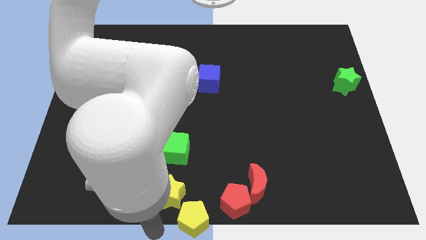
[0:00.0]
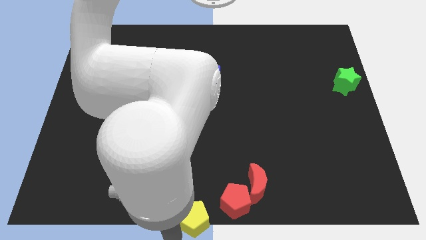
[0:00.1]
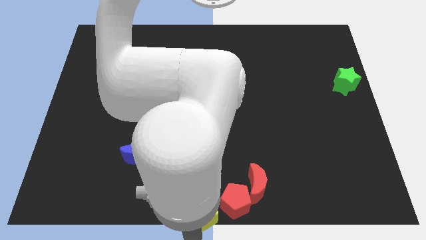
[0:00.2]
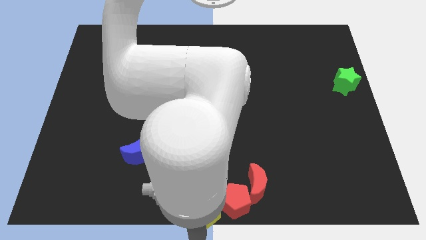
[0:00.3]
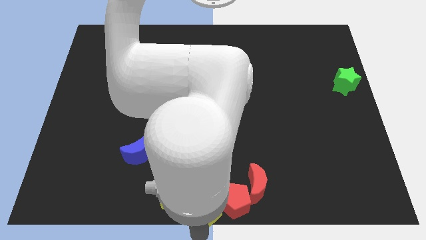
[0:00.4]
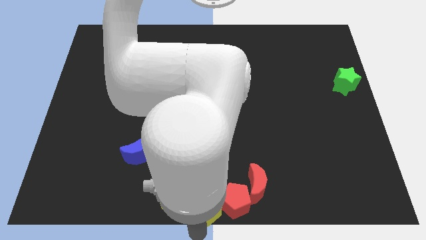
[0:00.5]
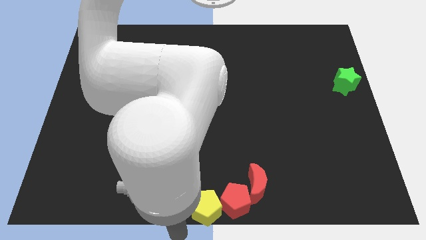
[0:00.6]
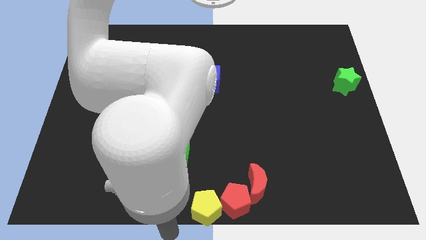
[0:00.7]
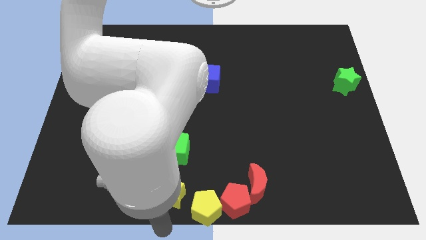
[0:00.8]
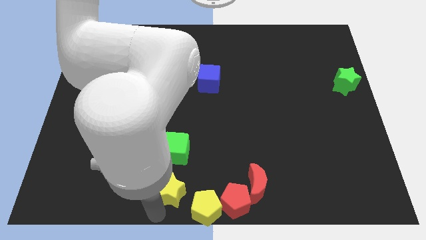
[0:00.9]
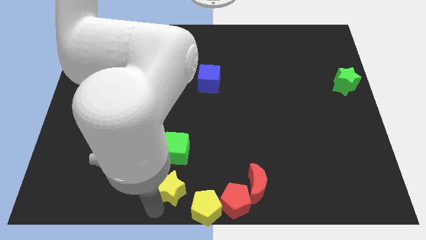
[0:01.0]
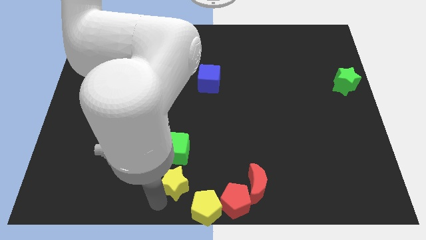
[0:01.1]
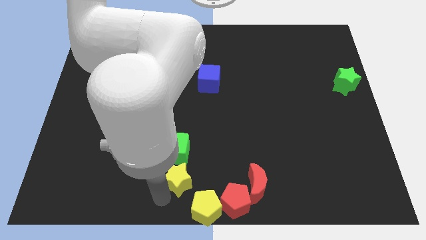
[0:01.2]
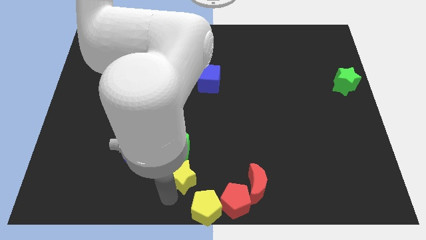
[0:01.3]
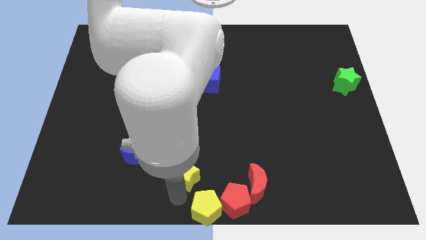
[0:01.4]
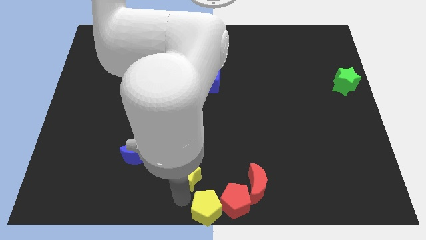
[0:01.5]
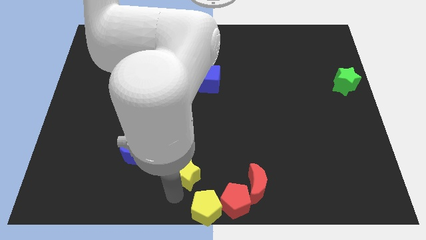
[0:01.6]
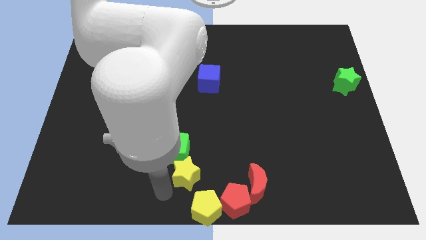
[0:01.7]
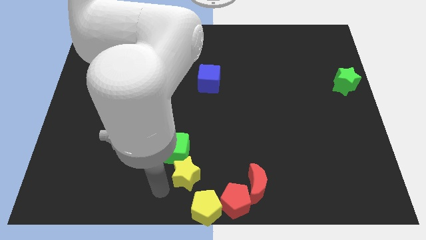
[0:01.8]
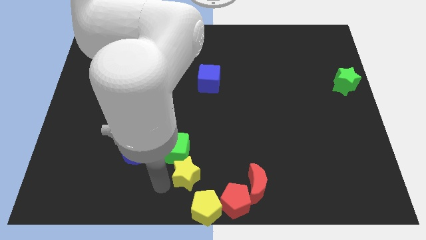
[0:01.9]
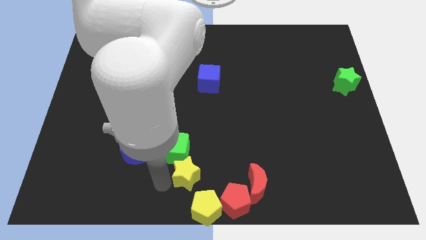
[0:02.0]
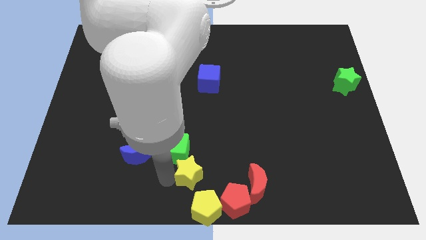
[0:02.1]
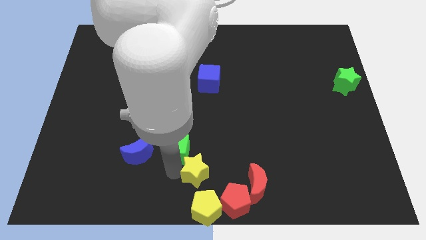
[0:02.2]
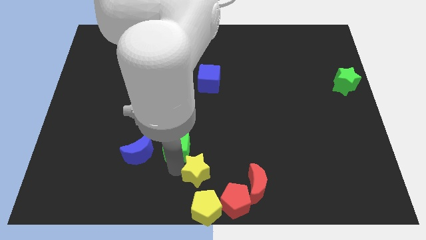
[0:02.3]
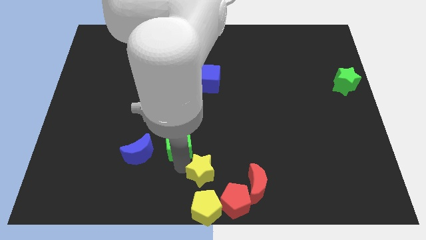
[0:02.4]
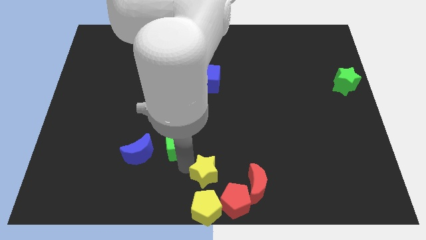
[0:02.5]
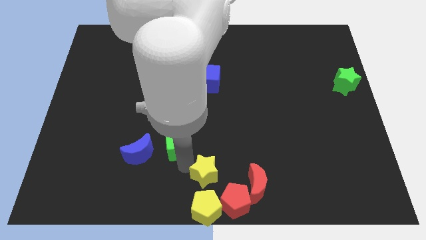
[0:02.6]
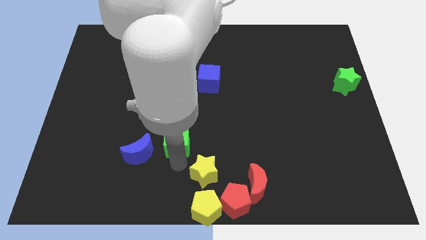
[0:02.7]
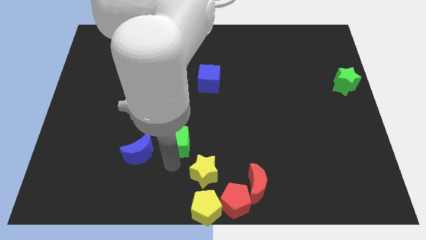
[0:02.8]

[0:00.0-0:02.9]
move the yellow star above to the yellow pentagon

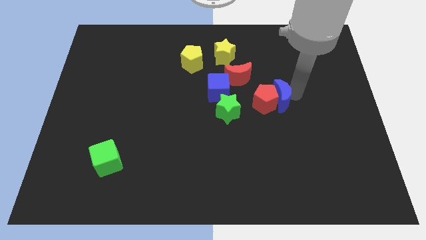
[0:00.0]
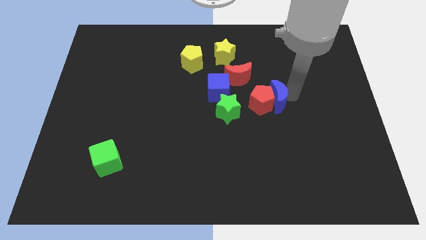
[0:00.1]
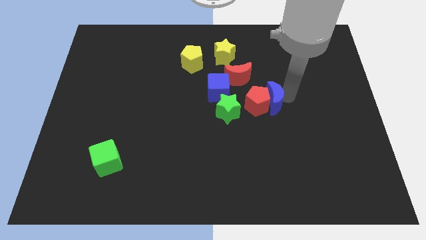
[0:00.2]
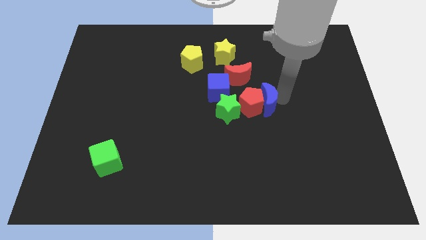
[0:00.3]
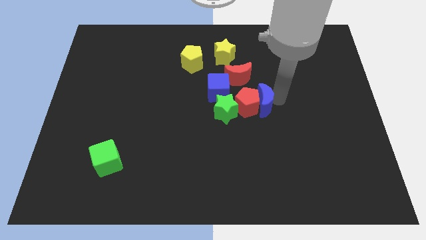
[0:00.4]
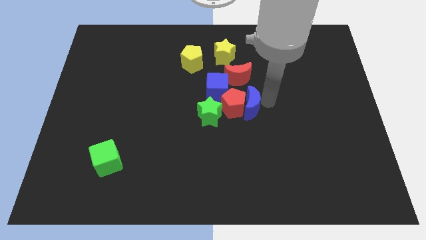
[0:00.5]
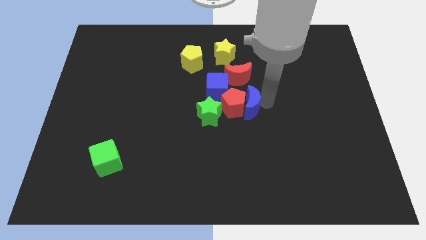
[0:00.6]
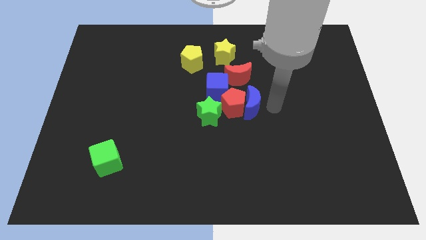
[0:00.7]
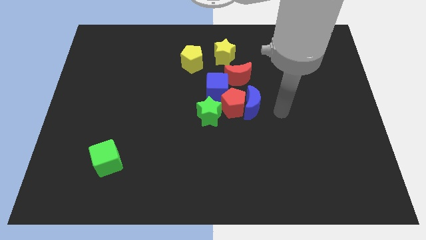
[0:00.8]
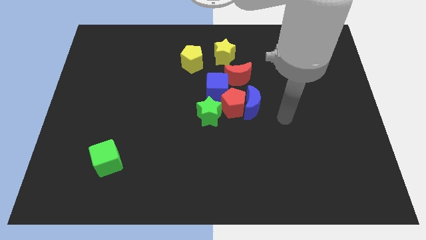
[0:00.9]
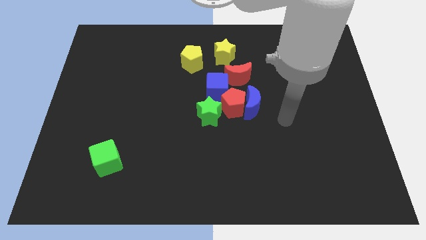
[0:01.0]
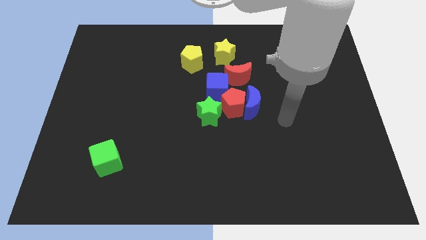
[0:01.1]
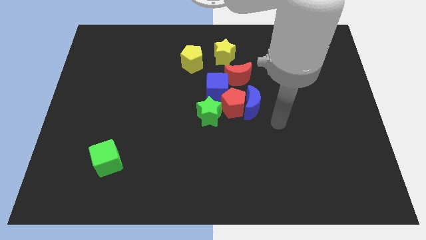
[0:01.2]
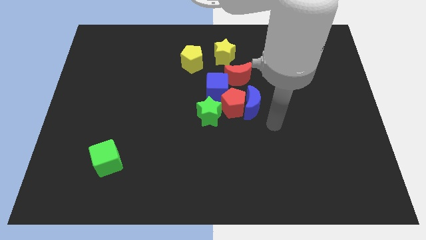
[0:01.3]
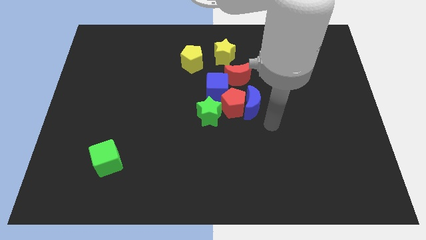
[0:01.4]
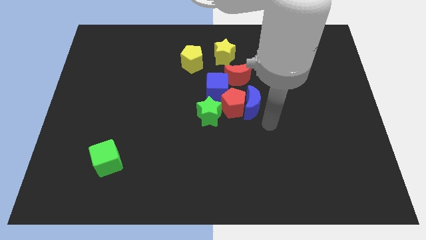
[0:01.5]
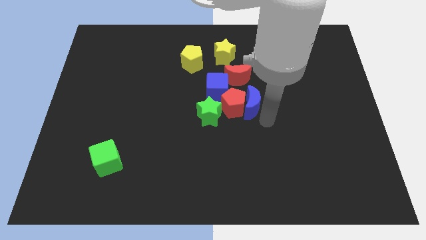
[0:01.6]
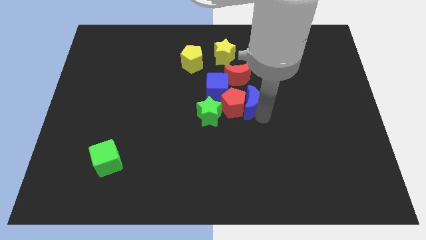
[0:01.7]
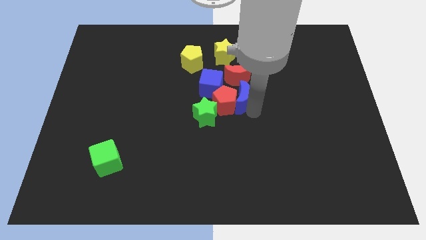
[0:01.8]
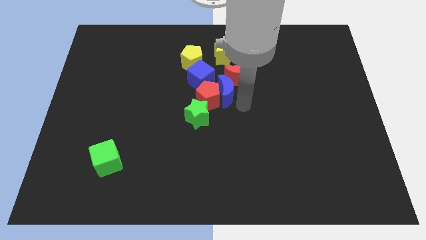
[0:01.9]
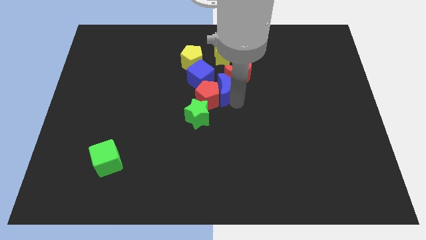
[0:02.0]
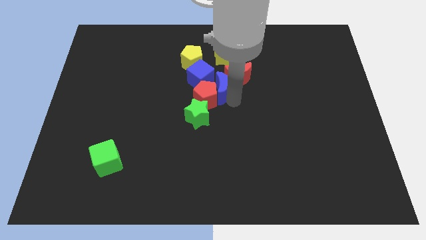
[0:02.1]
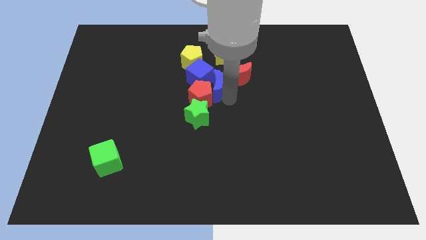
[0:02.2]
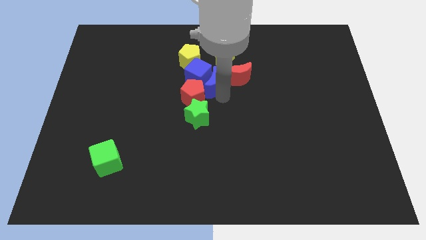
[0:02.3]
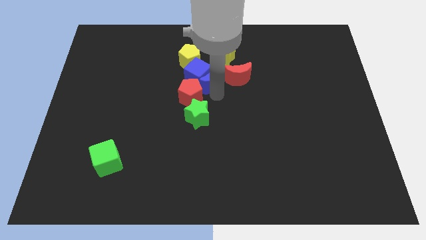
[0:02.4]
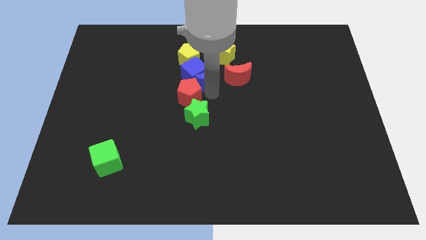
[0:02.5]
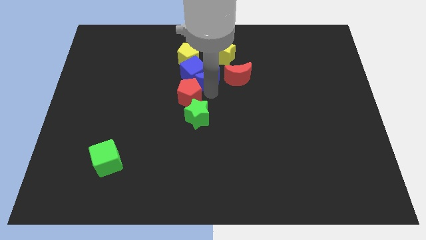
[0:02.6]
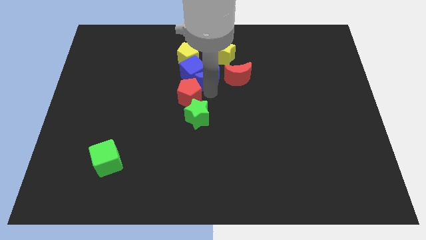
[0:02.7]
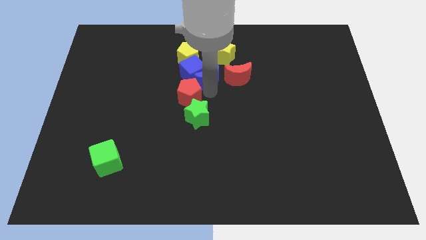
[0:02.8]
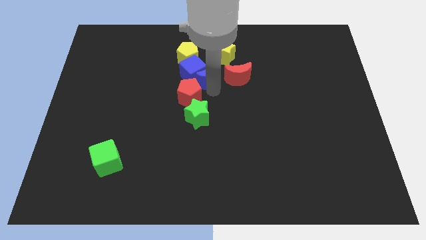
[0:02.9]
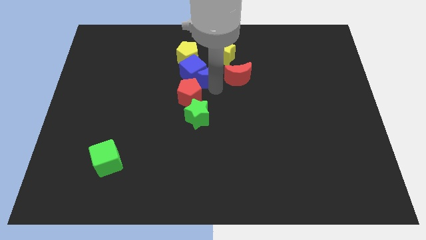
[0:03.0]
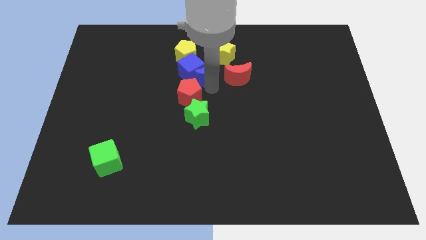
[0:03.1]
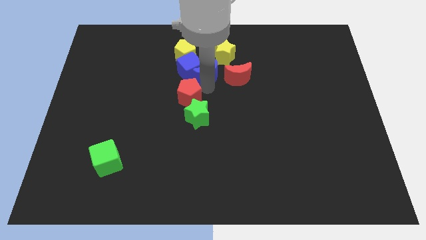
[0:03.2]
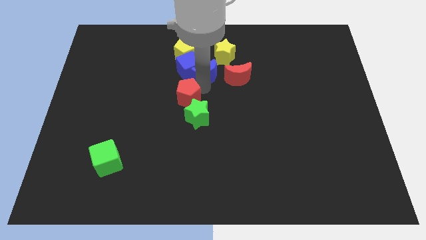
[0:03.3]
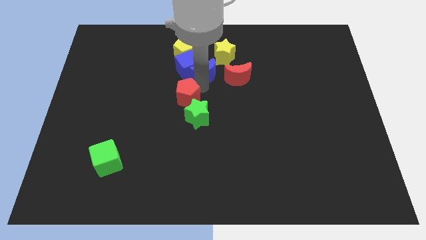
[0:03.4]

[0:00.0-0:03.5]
place blue moon to the left of red moon

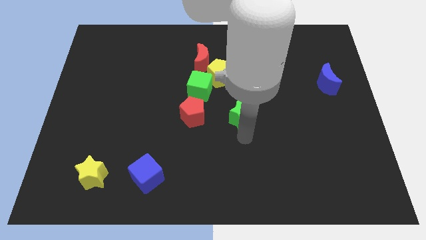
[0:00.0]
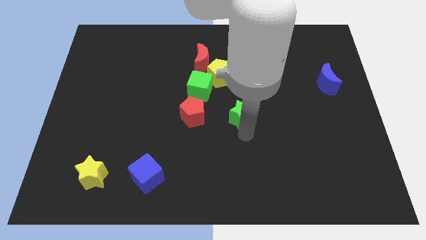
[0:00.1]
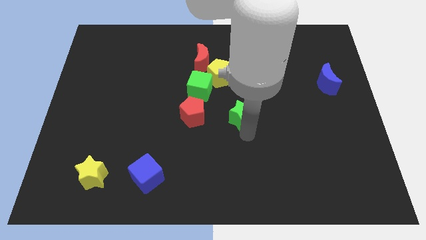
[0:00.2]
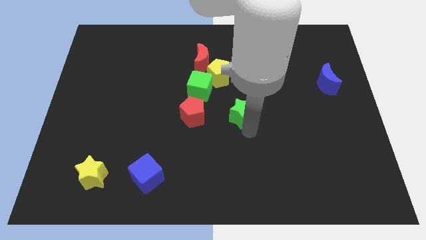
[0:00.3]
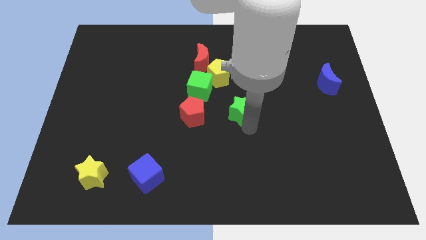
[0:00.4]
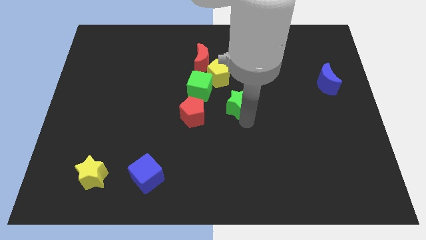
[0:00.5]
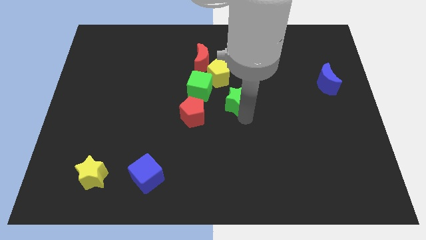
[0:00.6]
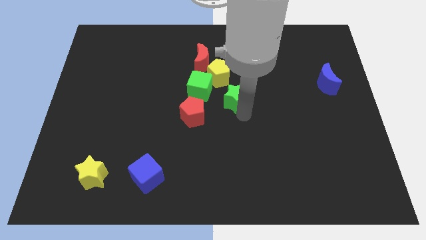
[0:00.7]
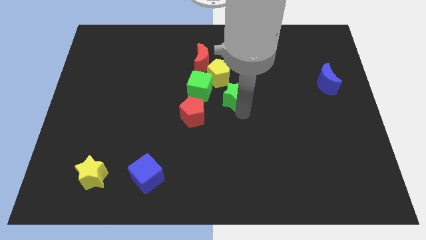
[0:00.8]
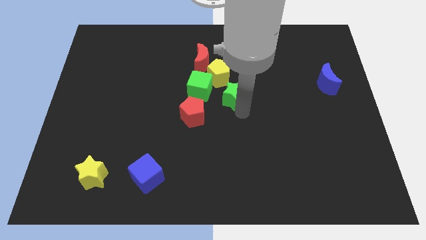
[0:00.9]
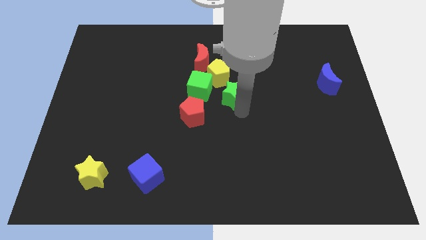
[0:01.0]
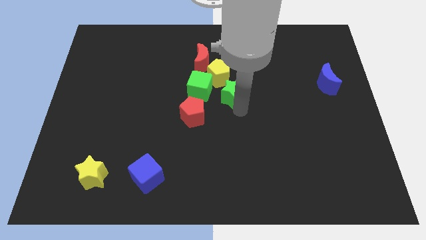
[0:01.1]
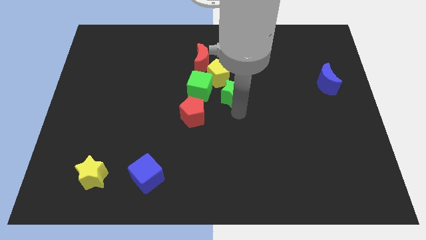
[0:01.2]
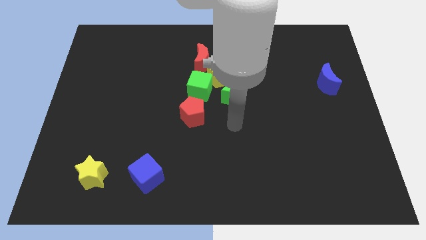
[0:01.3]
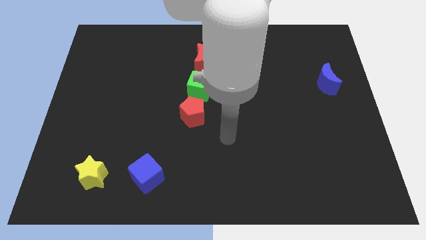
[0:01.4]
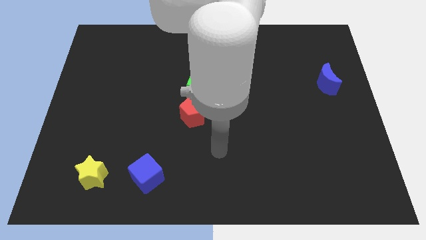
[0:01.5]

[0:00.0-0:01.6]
slide the green star close to the yellow pentagon

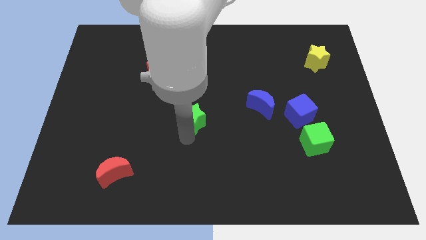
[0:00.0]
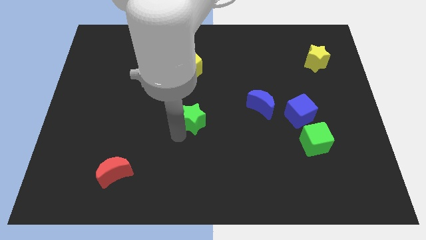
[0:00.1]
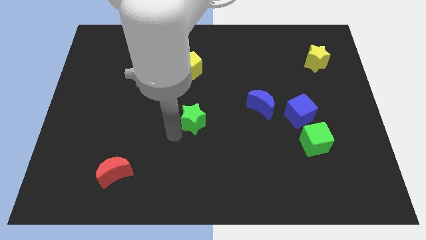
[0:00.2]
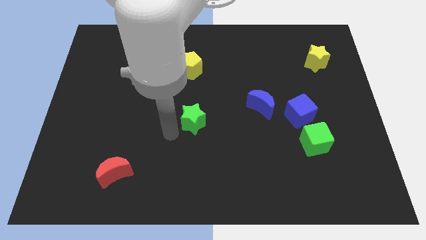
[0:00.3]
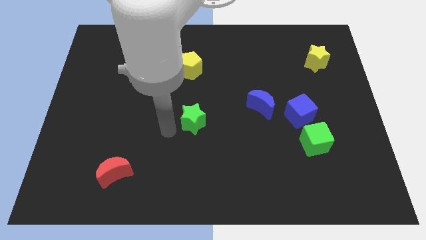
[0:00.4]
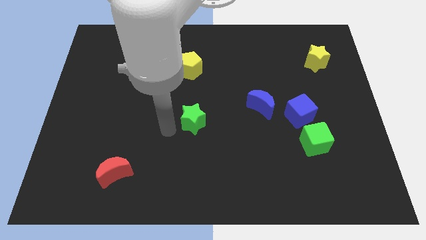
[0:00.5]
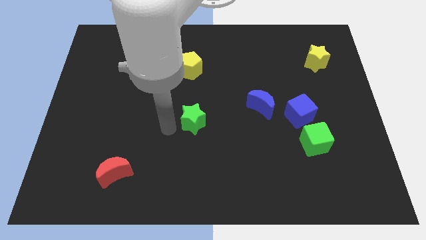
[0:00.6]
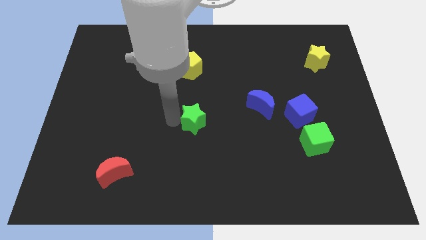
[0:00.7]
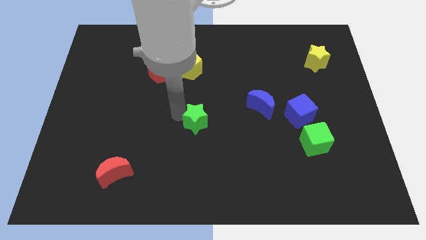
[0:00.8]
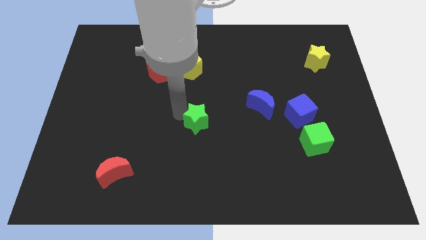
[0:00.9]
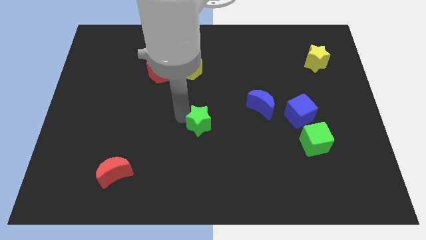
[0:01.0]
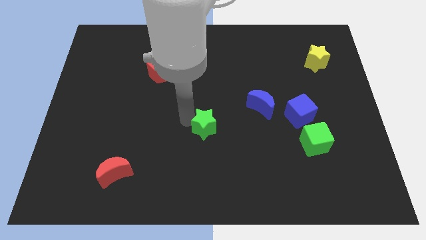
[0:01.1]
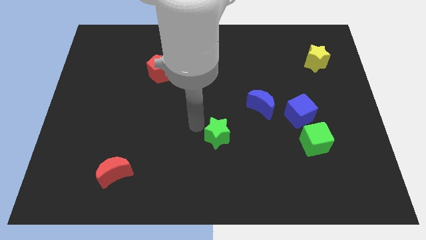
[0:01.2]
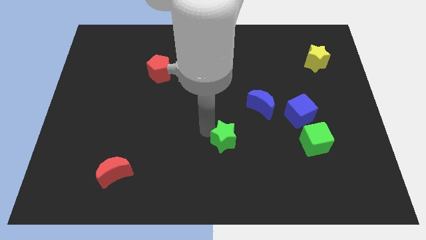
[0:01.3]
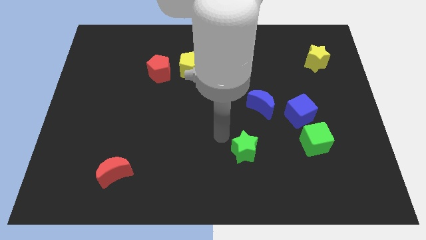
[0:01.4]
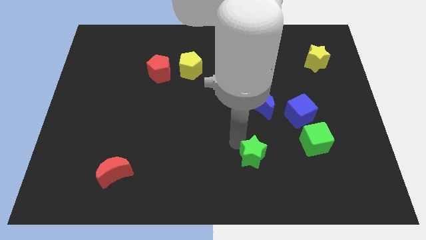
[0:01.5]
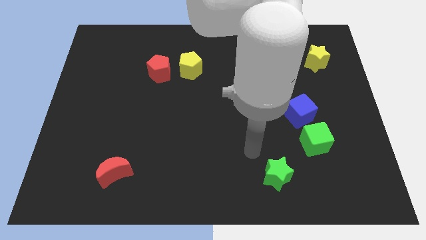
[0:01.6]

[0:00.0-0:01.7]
move green star parallel left to green cube
